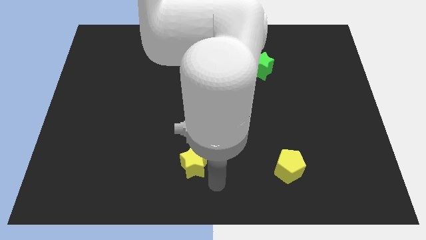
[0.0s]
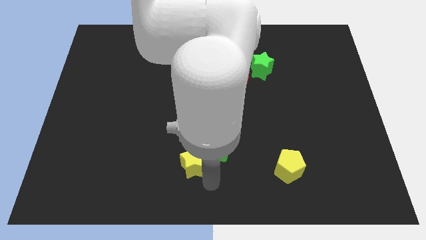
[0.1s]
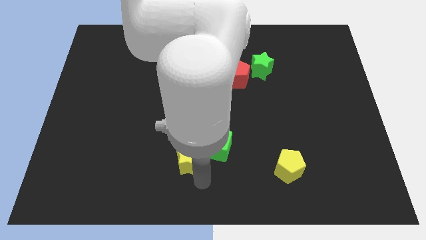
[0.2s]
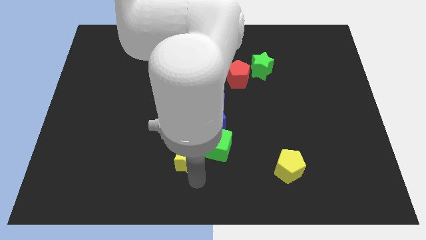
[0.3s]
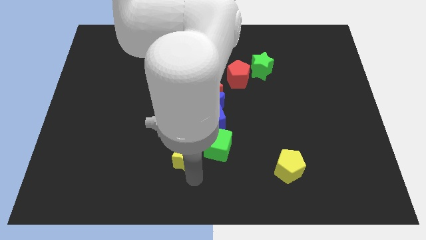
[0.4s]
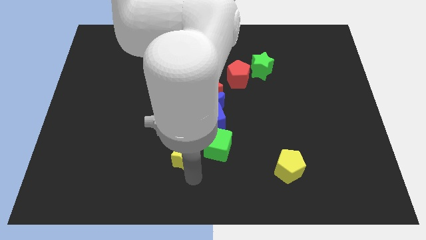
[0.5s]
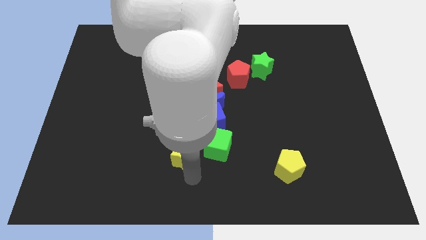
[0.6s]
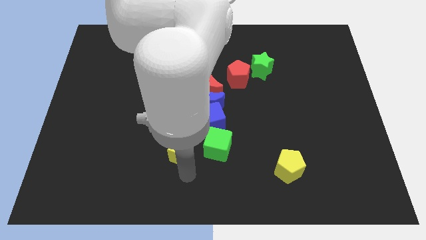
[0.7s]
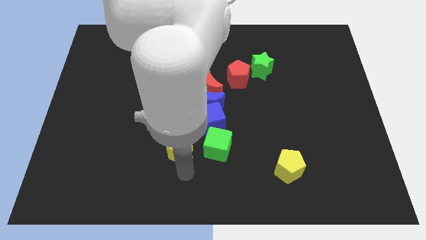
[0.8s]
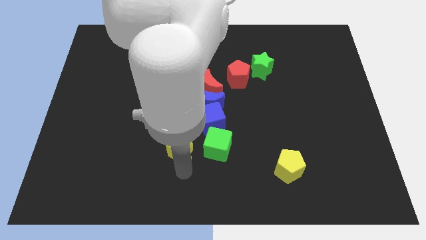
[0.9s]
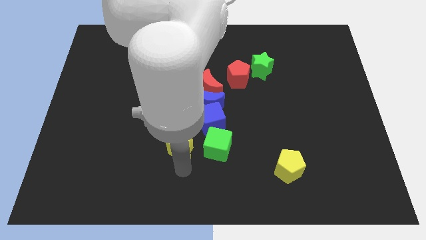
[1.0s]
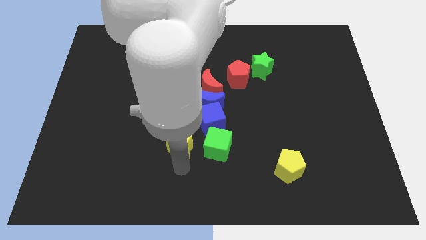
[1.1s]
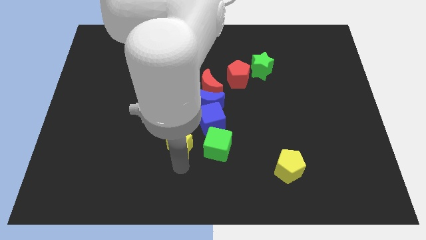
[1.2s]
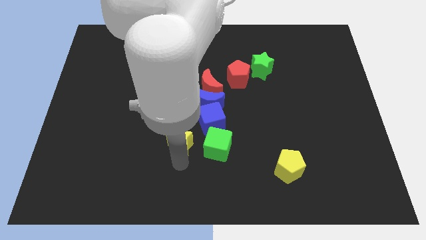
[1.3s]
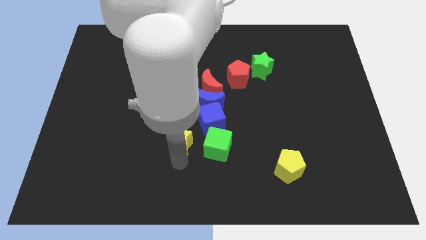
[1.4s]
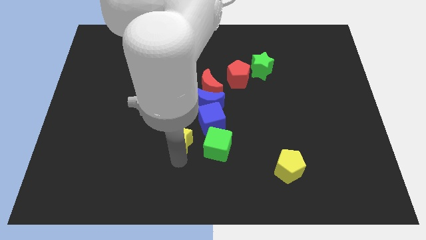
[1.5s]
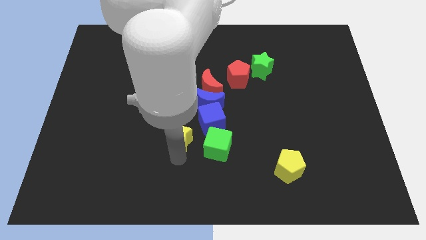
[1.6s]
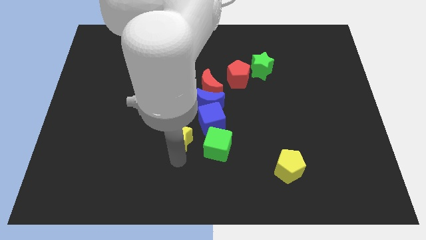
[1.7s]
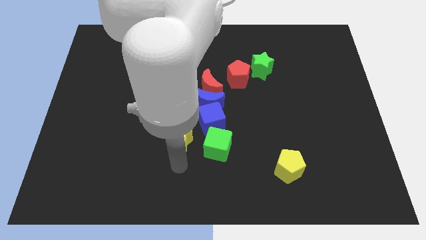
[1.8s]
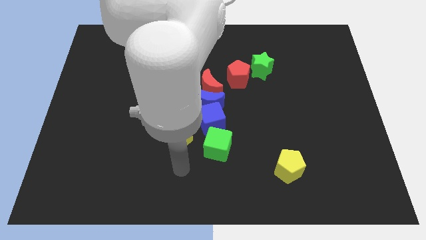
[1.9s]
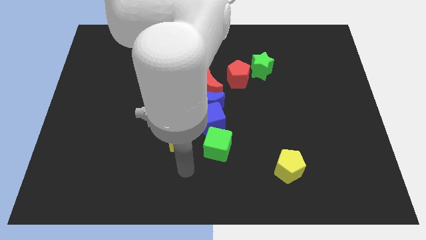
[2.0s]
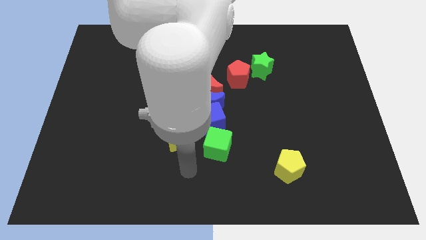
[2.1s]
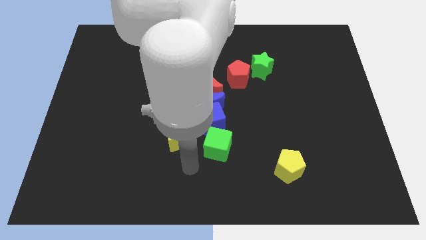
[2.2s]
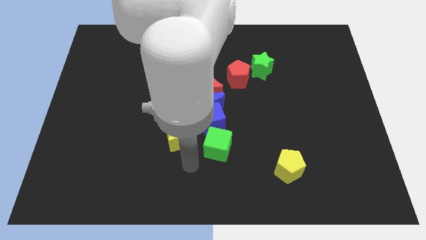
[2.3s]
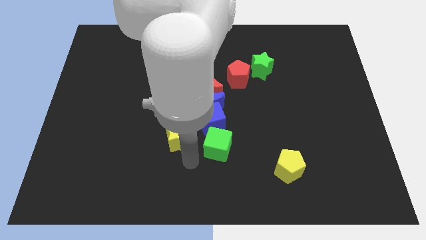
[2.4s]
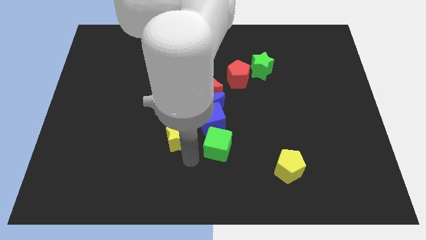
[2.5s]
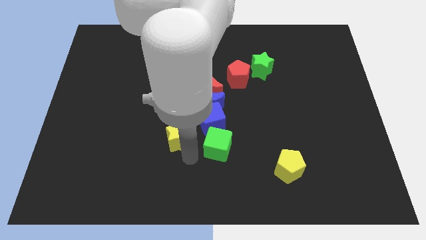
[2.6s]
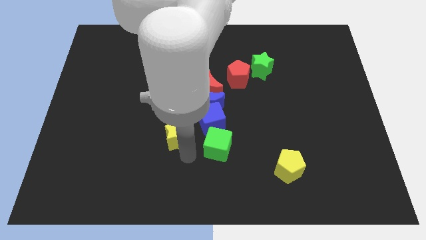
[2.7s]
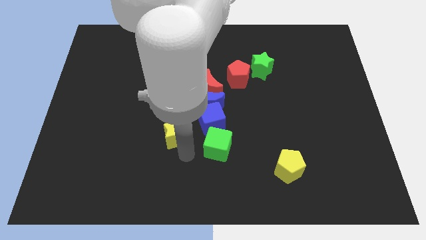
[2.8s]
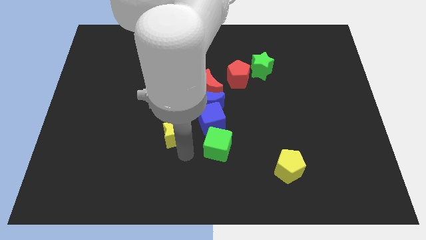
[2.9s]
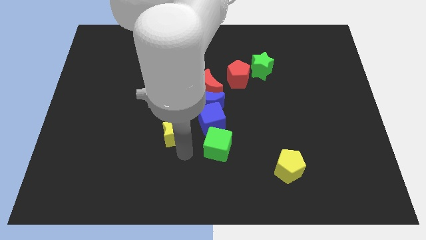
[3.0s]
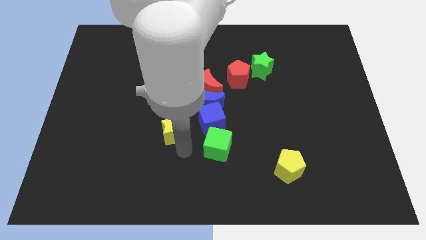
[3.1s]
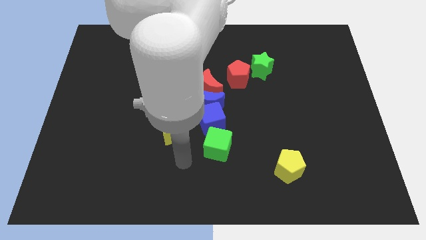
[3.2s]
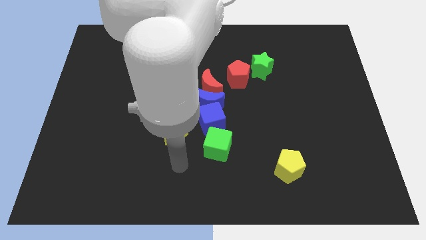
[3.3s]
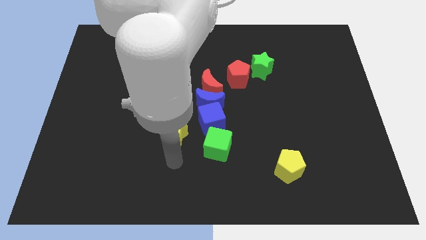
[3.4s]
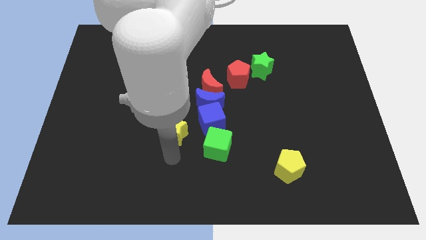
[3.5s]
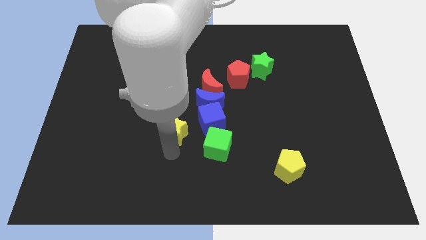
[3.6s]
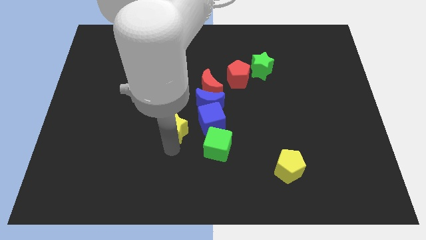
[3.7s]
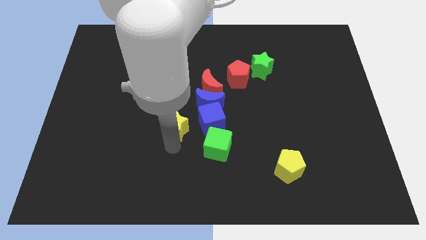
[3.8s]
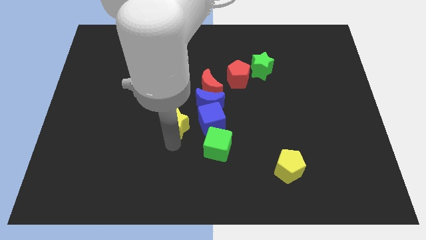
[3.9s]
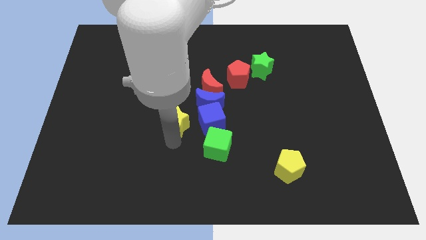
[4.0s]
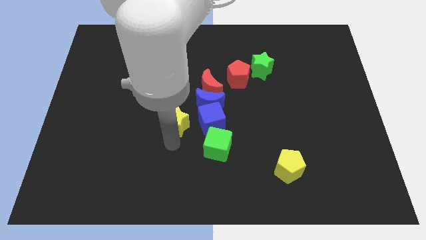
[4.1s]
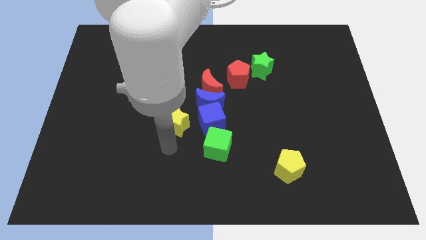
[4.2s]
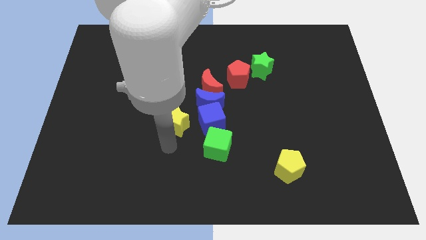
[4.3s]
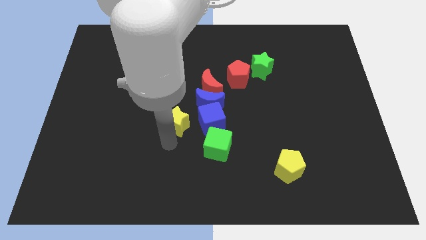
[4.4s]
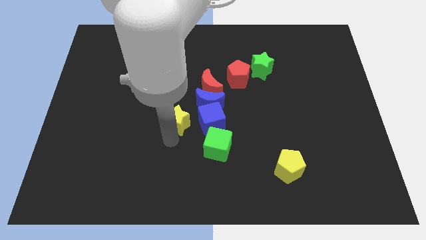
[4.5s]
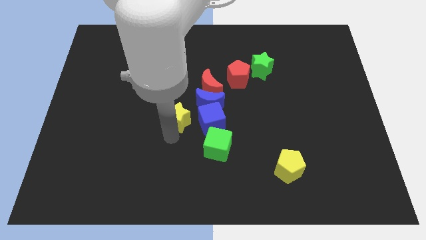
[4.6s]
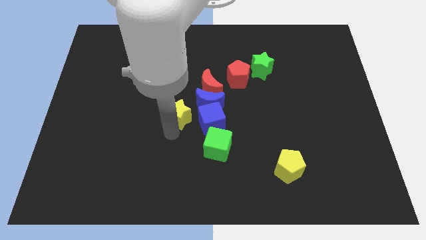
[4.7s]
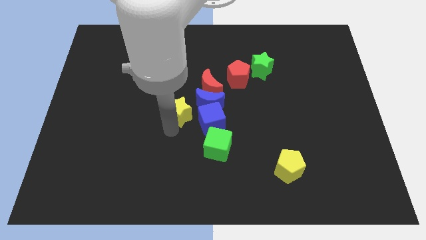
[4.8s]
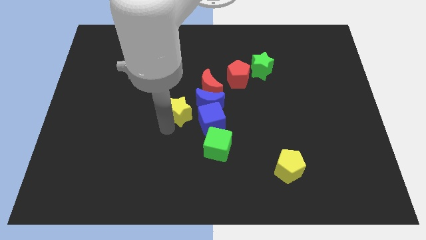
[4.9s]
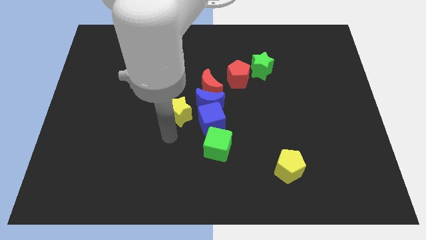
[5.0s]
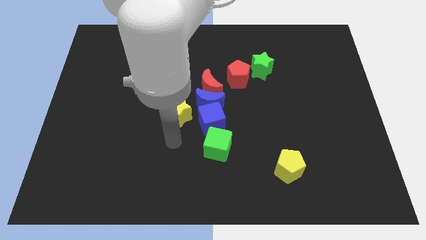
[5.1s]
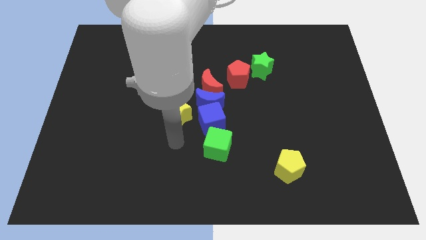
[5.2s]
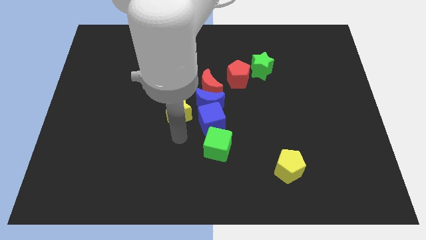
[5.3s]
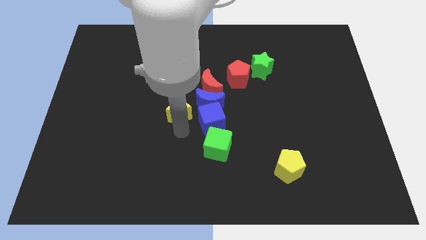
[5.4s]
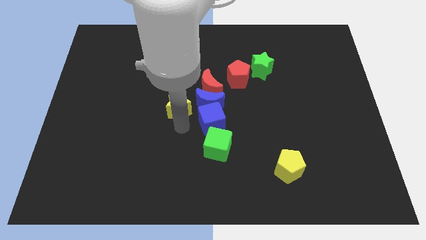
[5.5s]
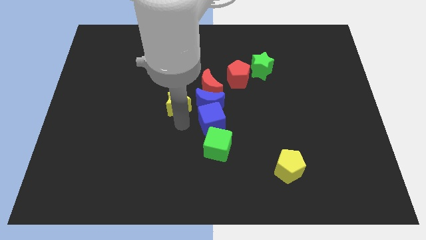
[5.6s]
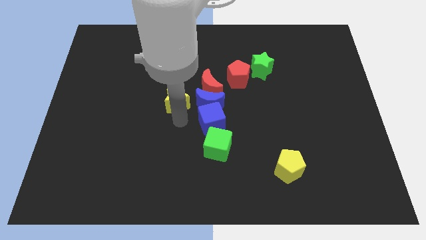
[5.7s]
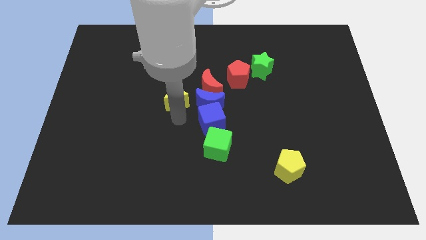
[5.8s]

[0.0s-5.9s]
move the yellow star left to the blue crescent

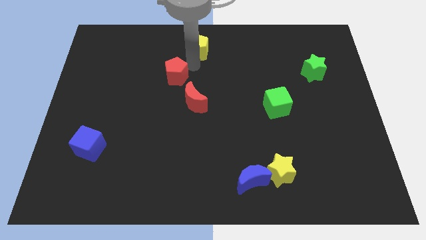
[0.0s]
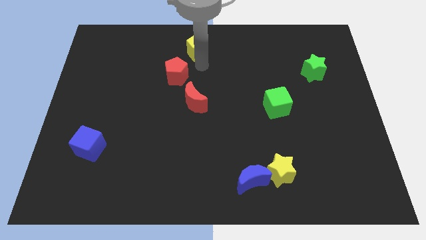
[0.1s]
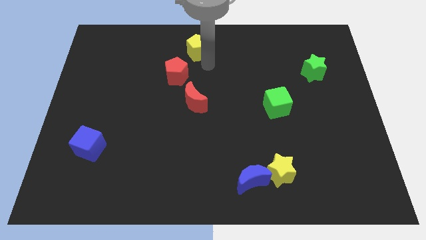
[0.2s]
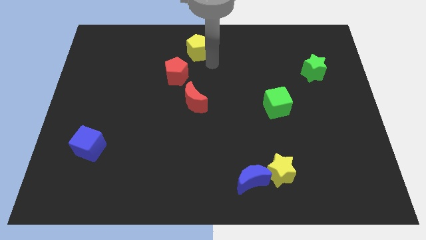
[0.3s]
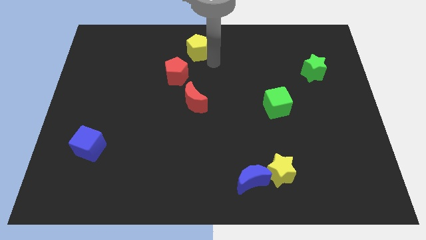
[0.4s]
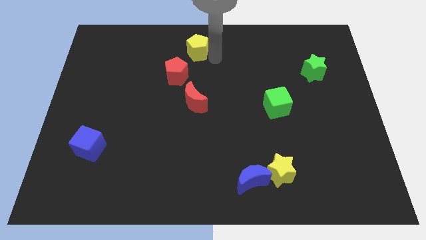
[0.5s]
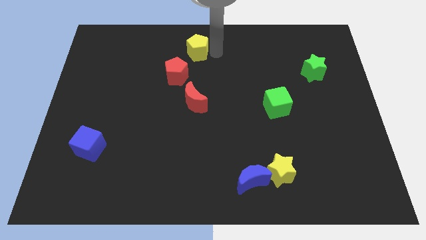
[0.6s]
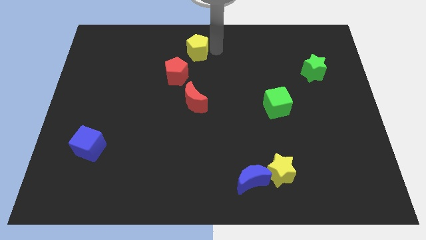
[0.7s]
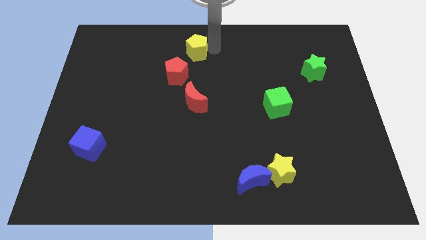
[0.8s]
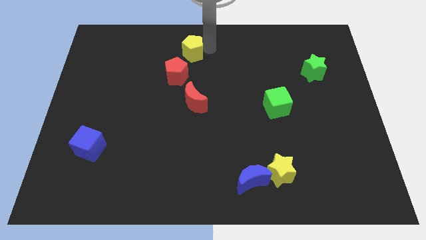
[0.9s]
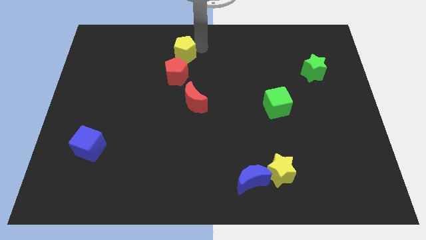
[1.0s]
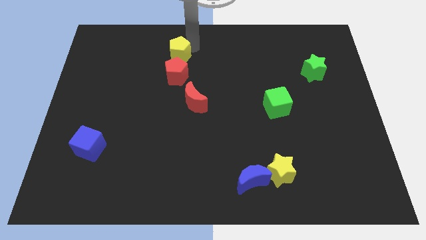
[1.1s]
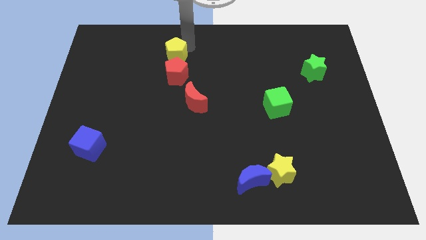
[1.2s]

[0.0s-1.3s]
place your arm towards the top right side of the yellow pentagon

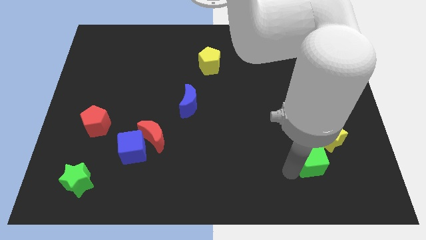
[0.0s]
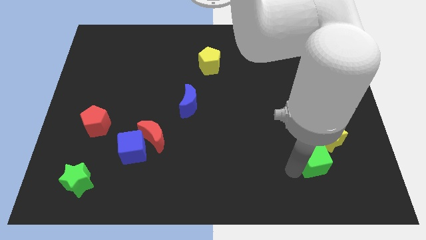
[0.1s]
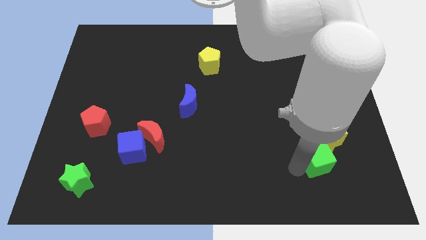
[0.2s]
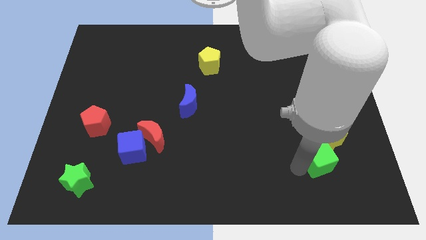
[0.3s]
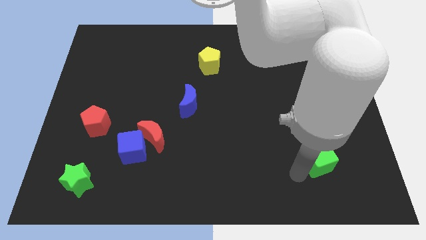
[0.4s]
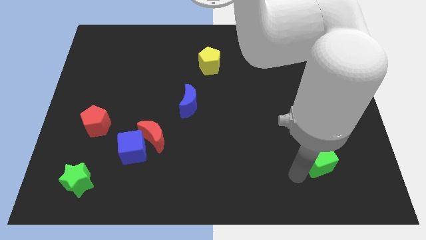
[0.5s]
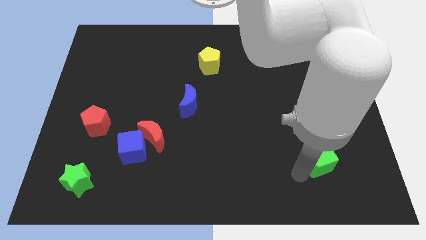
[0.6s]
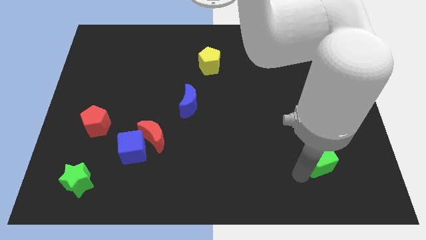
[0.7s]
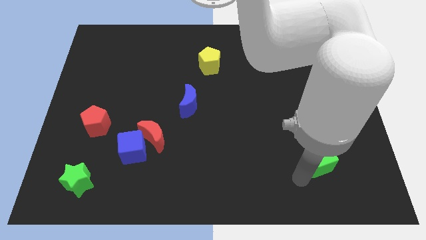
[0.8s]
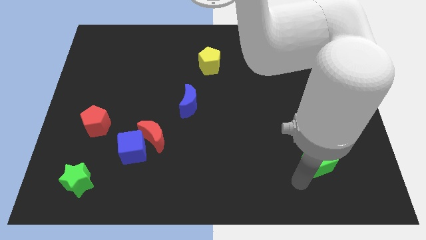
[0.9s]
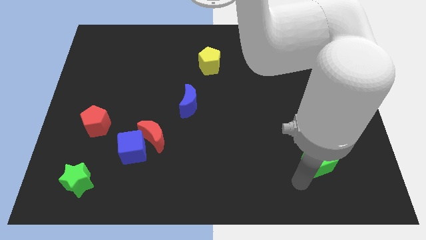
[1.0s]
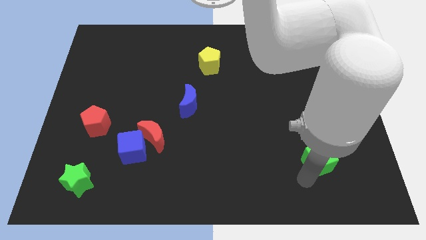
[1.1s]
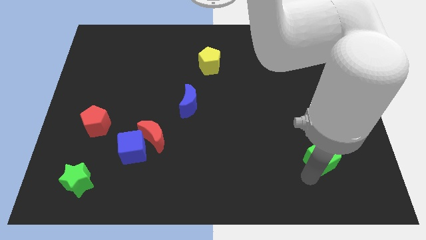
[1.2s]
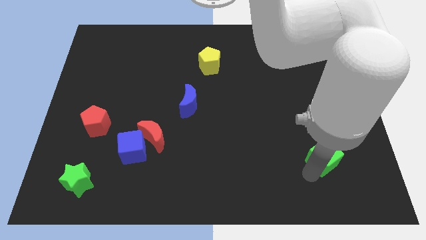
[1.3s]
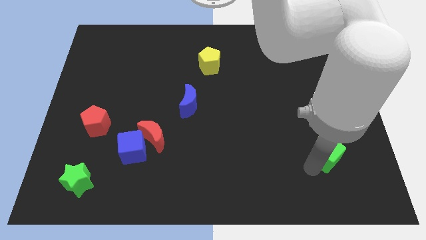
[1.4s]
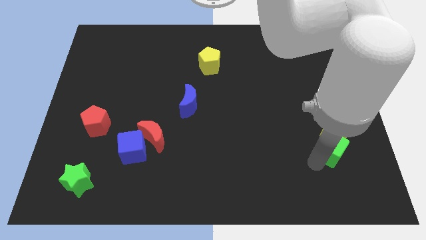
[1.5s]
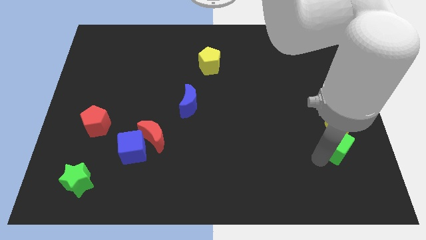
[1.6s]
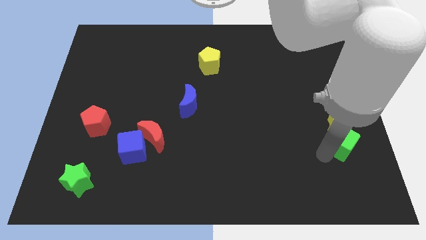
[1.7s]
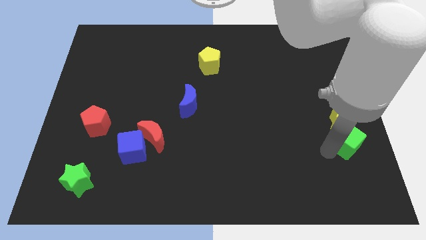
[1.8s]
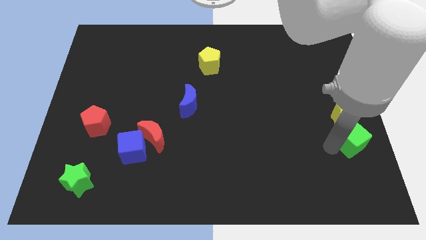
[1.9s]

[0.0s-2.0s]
push the green cube towards center right
